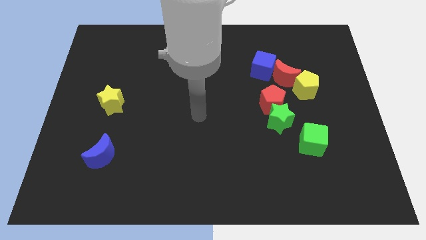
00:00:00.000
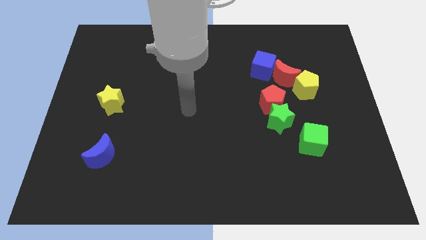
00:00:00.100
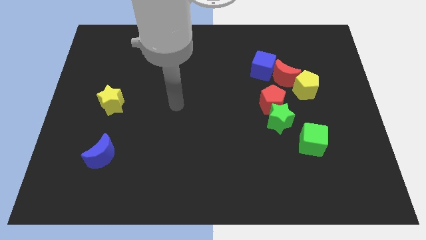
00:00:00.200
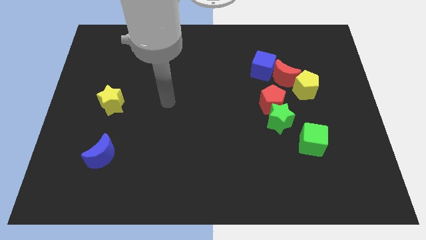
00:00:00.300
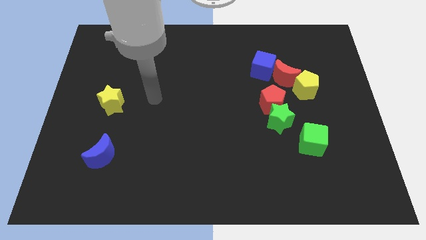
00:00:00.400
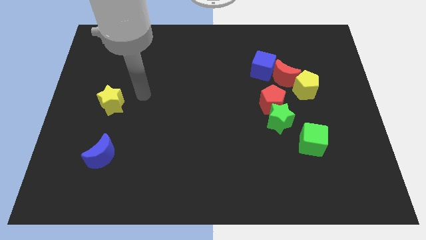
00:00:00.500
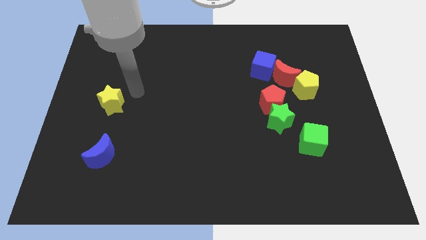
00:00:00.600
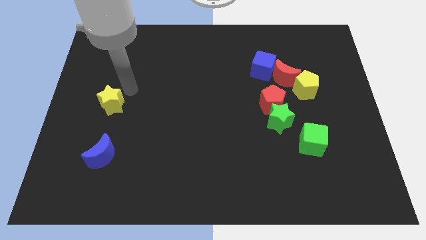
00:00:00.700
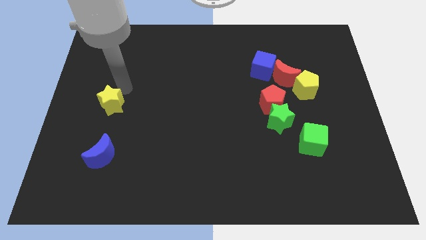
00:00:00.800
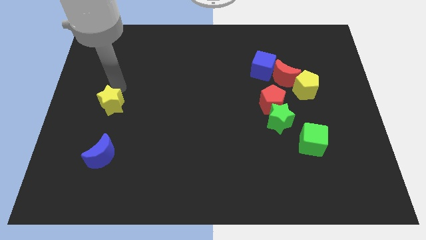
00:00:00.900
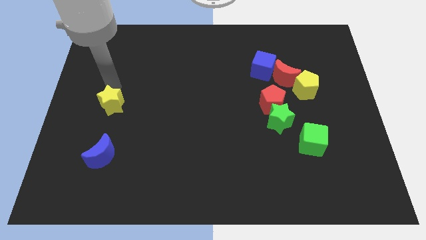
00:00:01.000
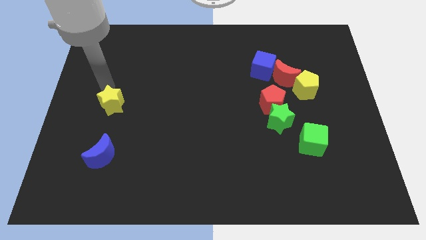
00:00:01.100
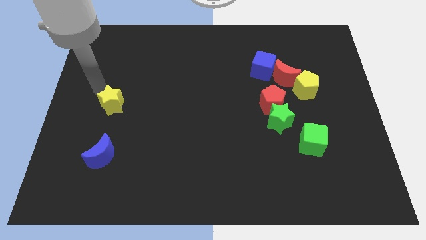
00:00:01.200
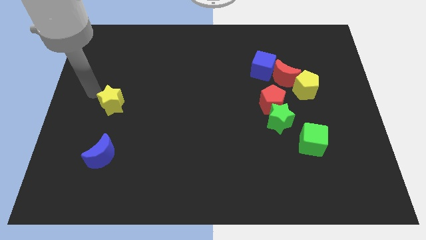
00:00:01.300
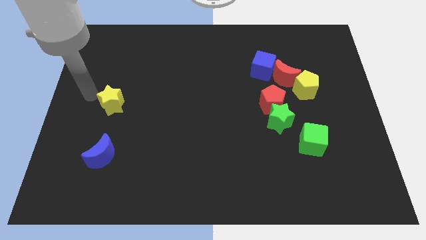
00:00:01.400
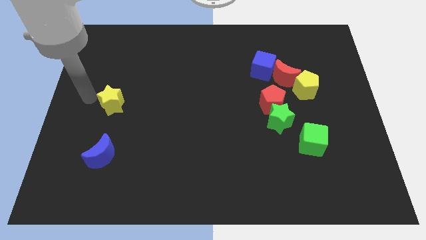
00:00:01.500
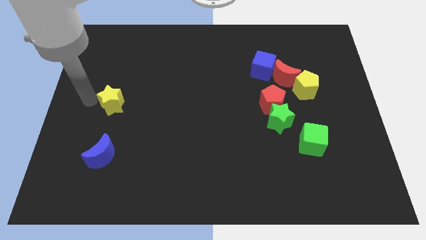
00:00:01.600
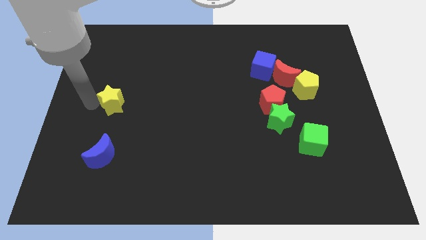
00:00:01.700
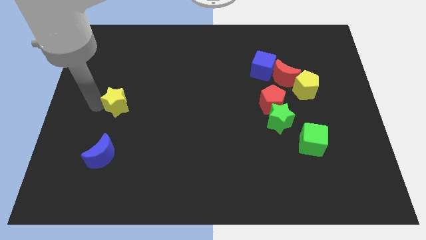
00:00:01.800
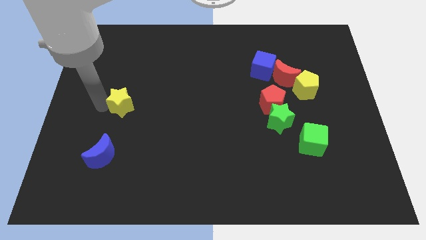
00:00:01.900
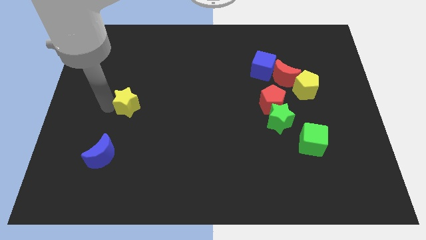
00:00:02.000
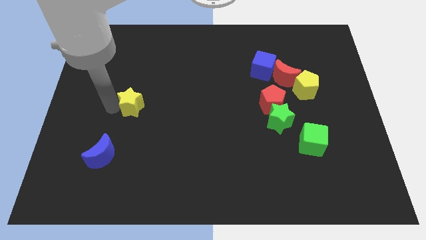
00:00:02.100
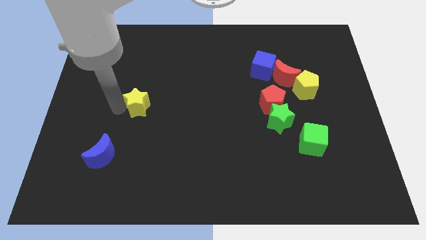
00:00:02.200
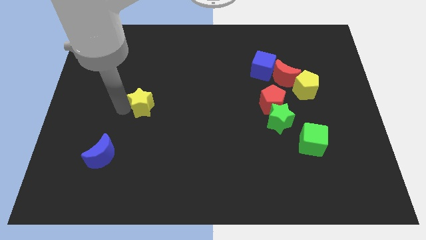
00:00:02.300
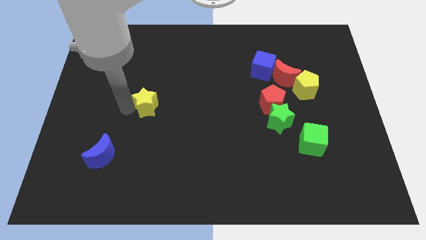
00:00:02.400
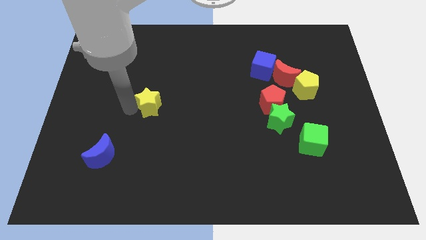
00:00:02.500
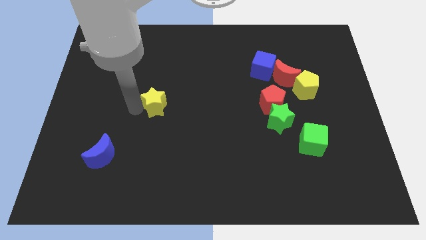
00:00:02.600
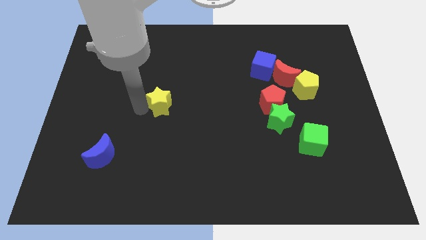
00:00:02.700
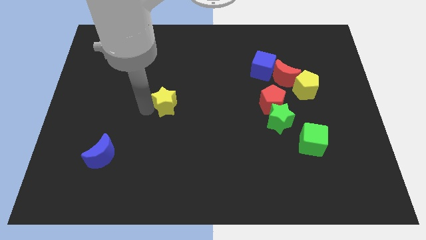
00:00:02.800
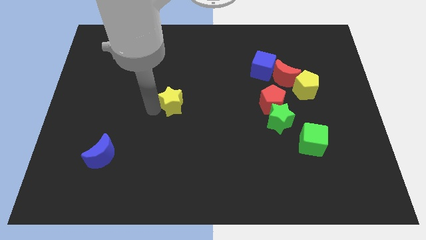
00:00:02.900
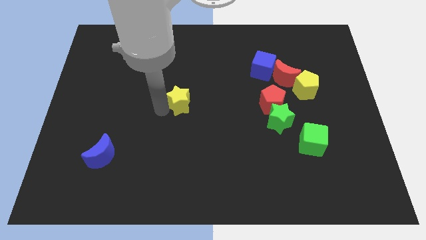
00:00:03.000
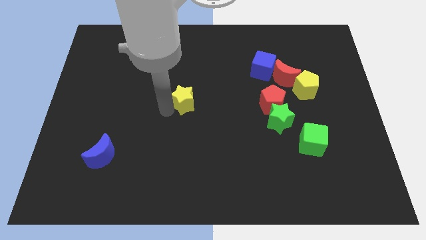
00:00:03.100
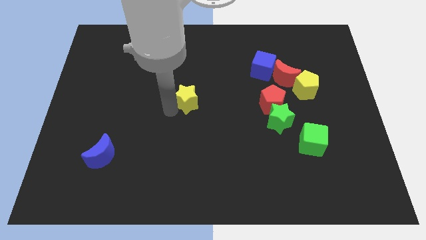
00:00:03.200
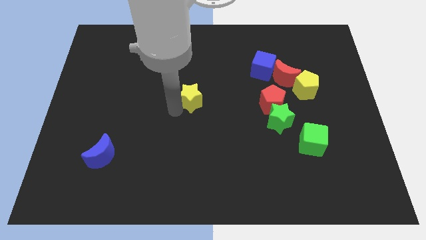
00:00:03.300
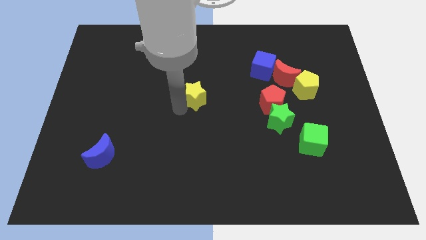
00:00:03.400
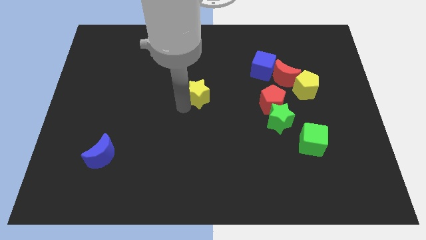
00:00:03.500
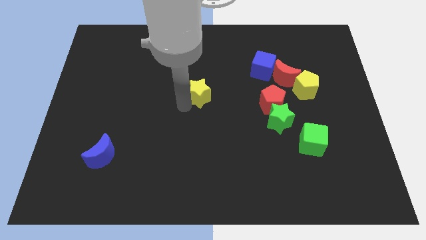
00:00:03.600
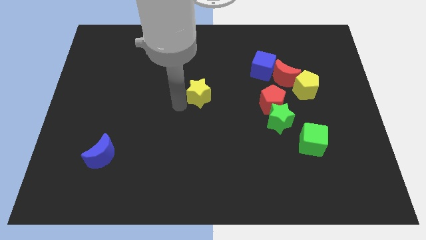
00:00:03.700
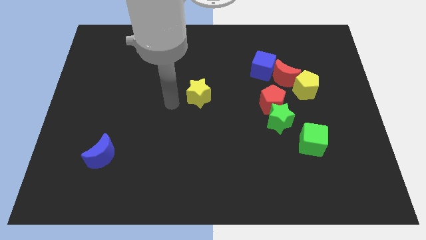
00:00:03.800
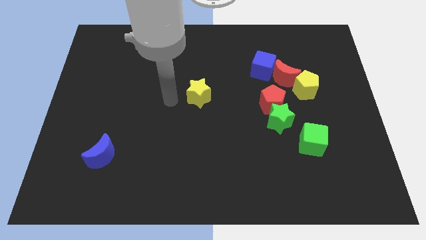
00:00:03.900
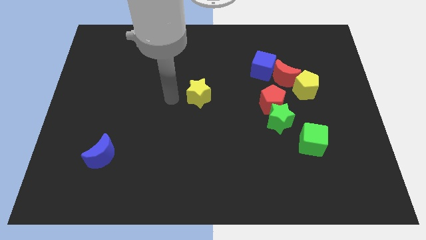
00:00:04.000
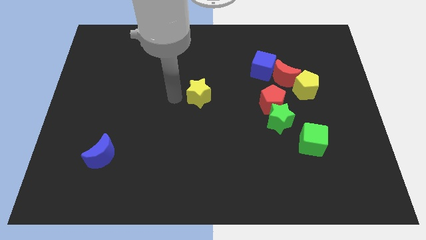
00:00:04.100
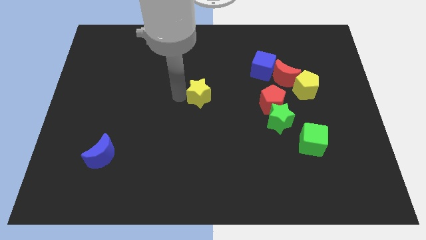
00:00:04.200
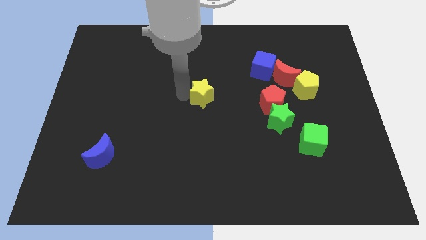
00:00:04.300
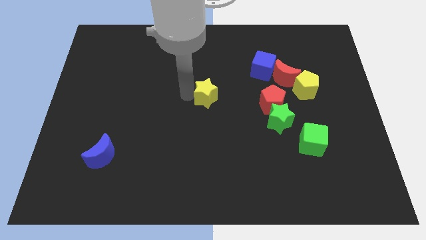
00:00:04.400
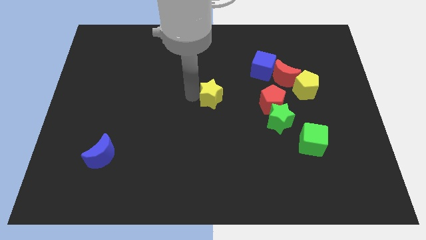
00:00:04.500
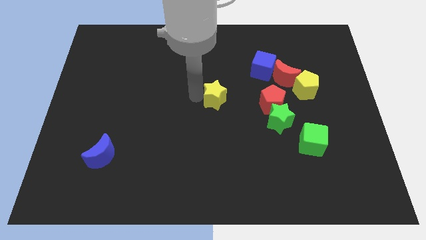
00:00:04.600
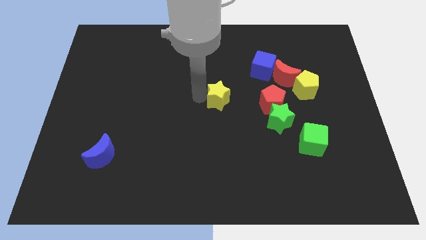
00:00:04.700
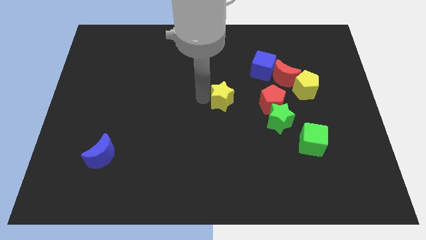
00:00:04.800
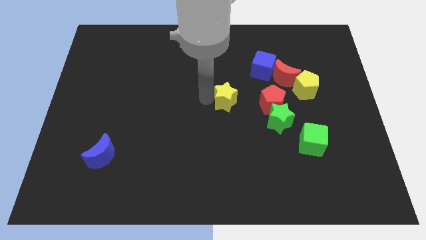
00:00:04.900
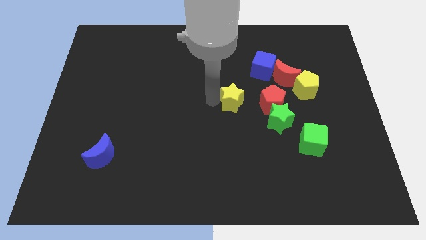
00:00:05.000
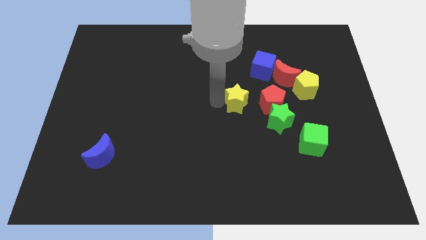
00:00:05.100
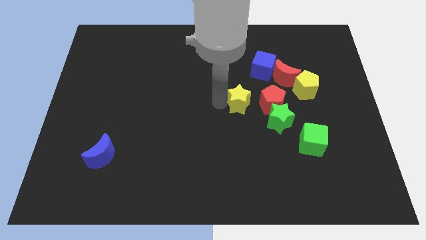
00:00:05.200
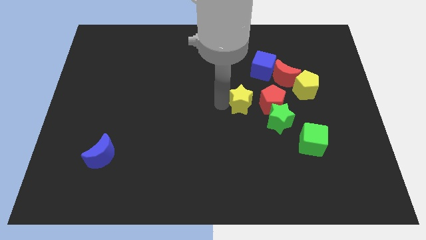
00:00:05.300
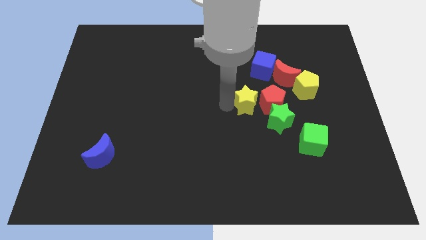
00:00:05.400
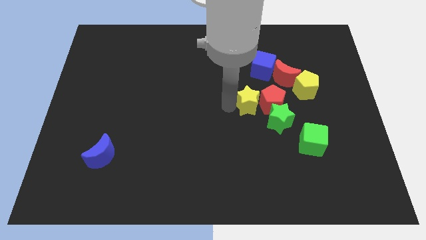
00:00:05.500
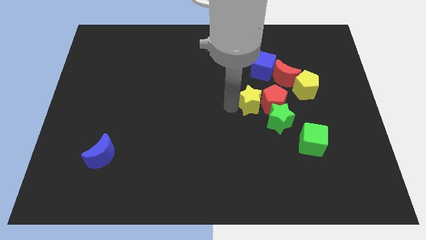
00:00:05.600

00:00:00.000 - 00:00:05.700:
move the yellow star to the red pentagon

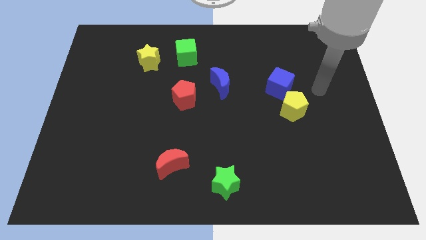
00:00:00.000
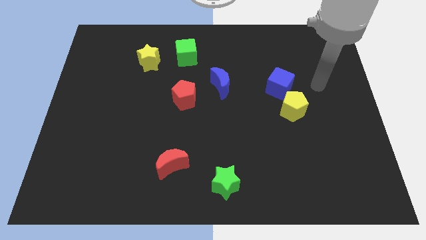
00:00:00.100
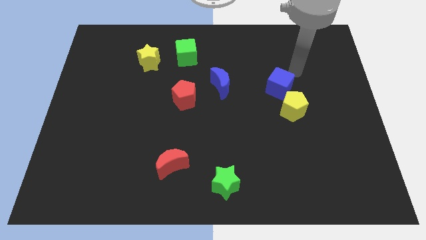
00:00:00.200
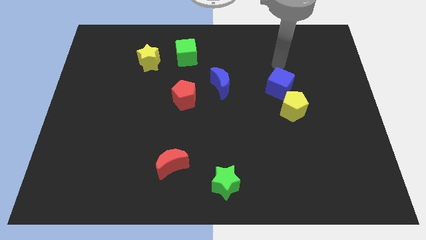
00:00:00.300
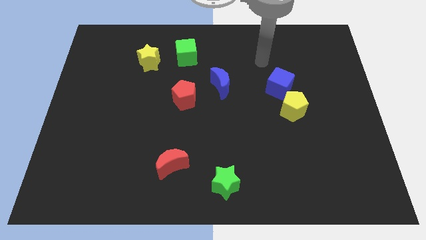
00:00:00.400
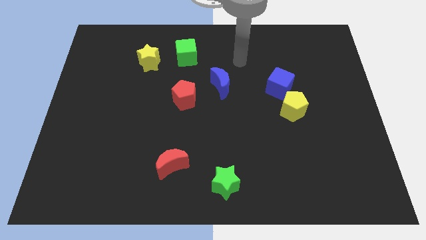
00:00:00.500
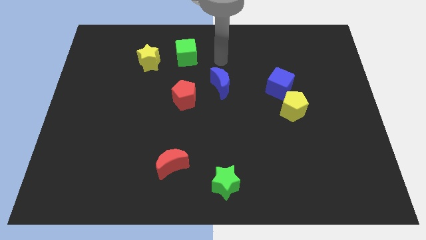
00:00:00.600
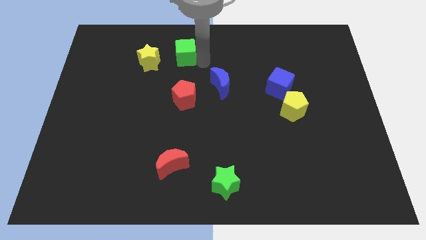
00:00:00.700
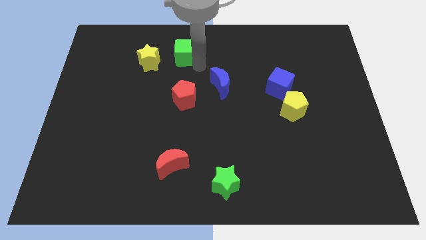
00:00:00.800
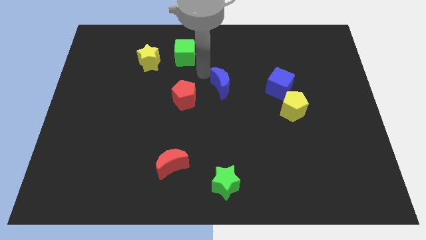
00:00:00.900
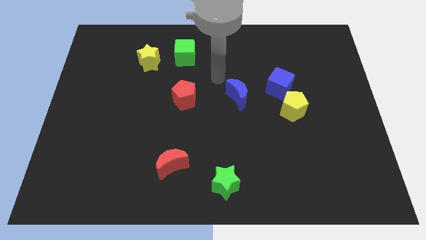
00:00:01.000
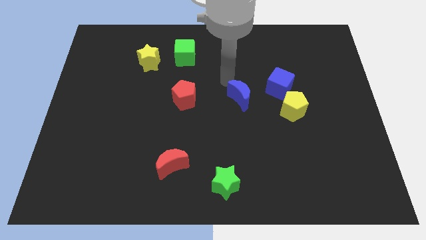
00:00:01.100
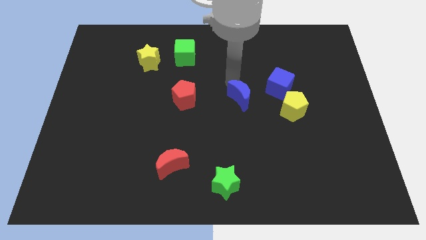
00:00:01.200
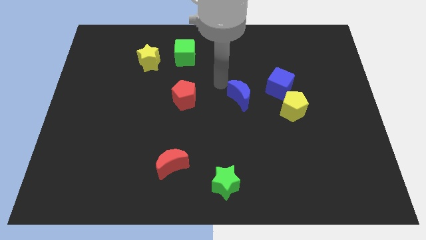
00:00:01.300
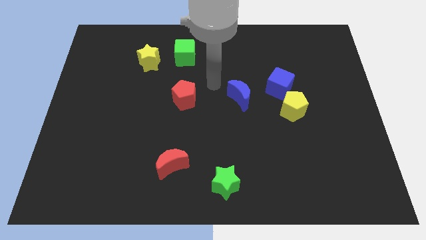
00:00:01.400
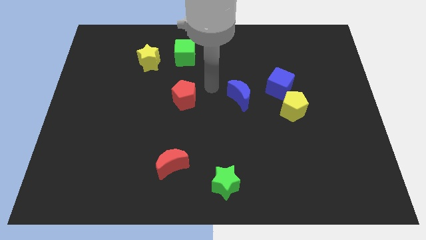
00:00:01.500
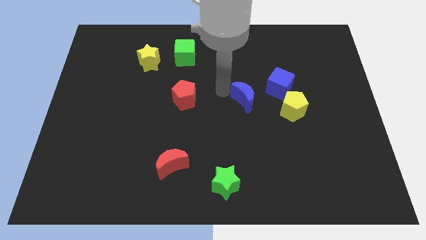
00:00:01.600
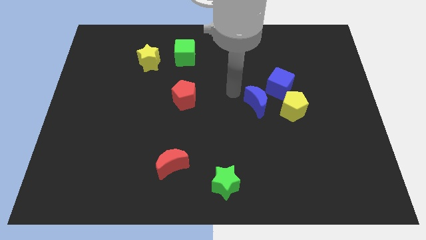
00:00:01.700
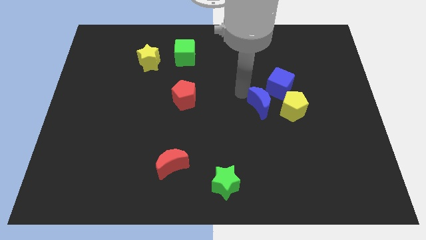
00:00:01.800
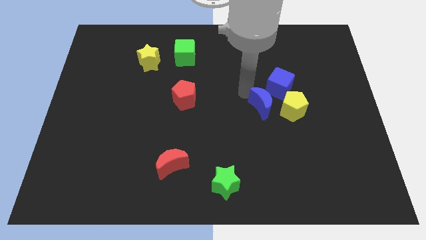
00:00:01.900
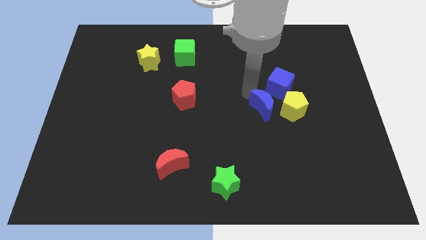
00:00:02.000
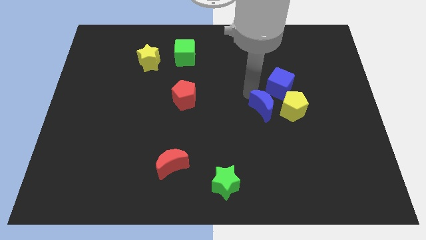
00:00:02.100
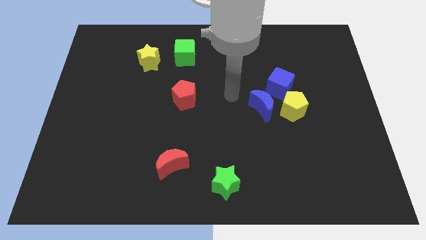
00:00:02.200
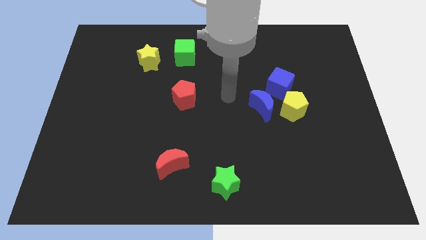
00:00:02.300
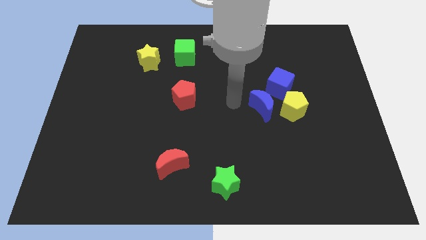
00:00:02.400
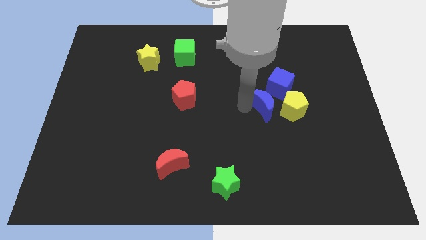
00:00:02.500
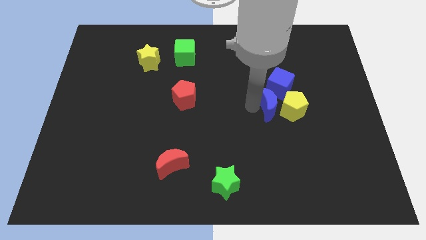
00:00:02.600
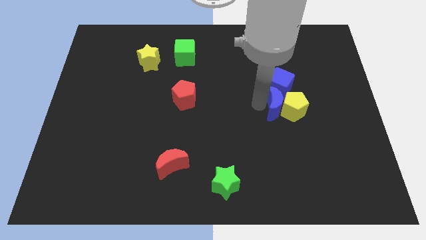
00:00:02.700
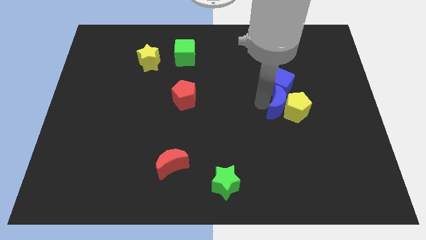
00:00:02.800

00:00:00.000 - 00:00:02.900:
move the blue moon close to the yellow pentagon
